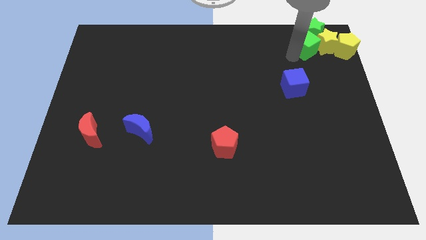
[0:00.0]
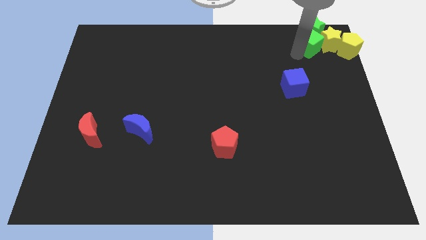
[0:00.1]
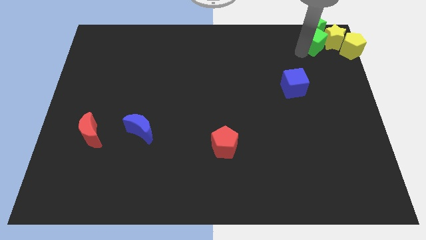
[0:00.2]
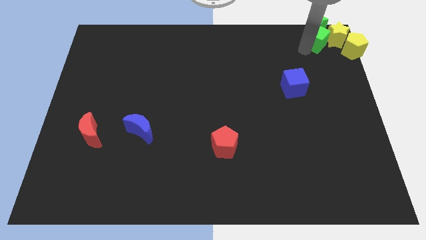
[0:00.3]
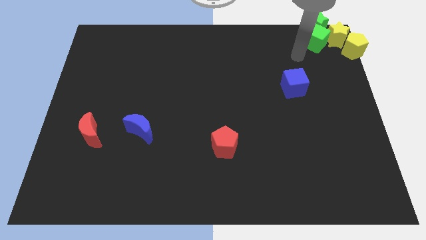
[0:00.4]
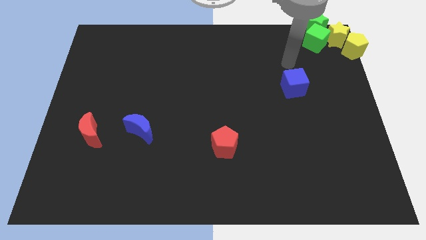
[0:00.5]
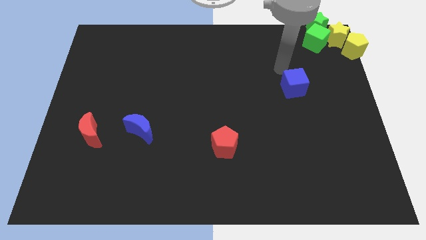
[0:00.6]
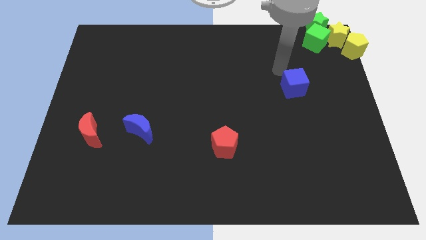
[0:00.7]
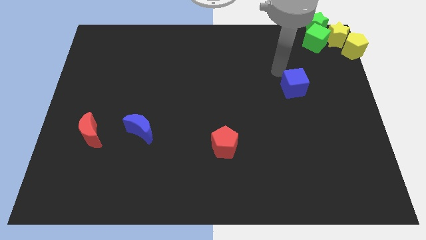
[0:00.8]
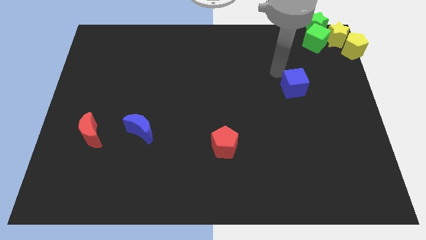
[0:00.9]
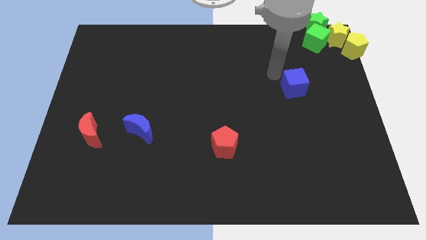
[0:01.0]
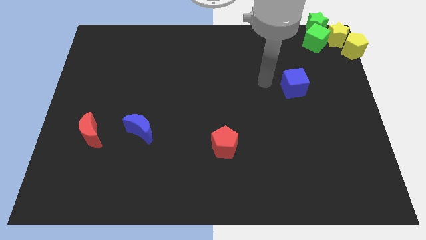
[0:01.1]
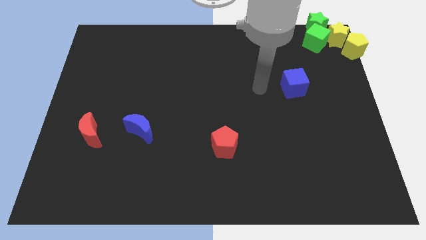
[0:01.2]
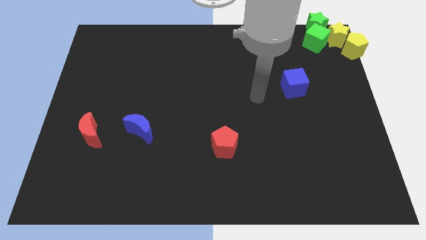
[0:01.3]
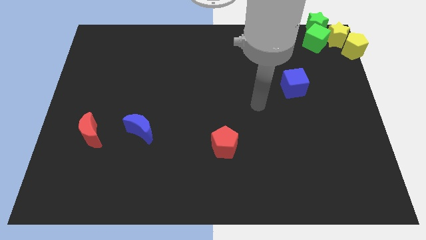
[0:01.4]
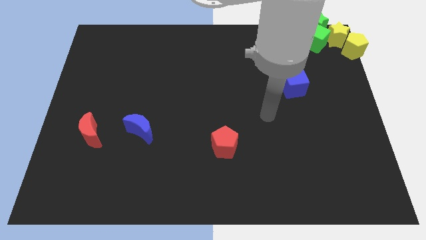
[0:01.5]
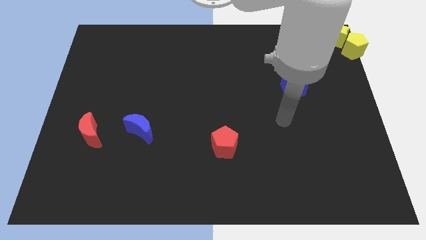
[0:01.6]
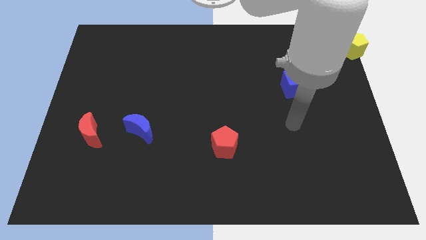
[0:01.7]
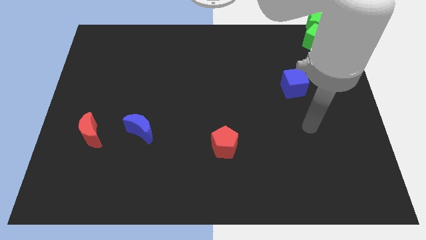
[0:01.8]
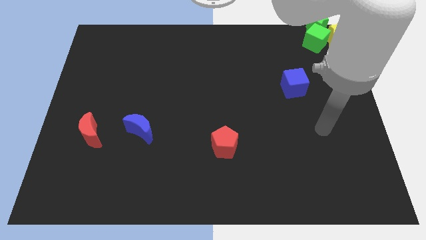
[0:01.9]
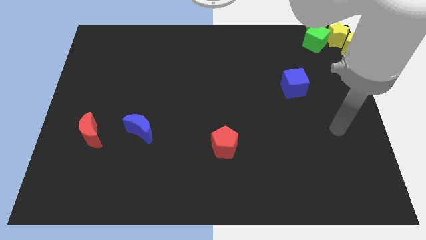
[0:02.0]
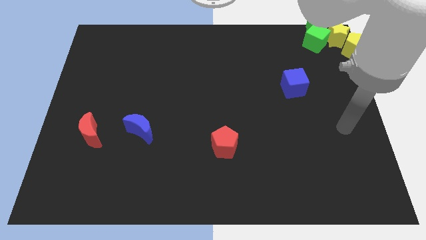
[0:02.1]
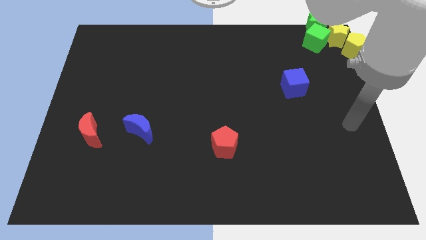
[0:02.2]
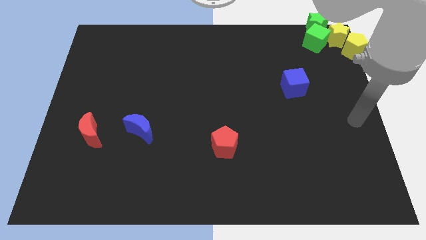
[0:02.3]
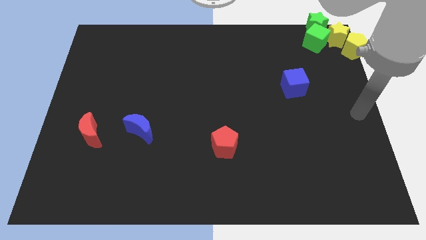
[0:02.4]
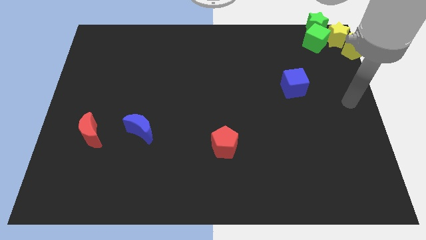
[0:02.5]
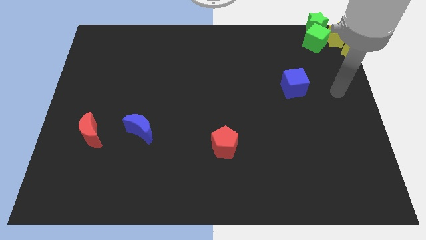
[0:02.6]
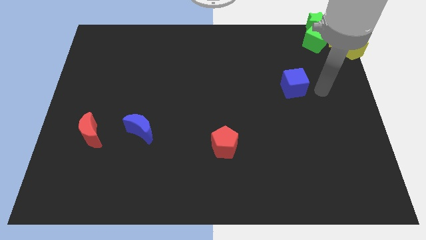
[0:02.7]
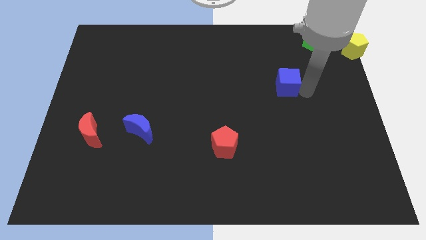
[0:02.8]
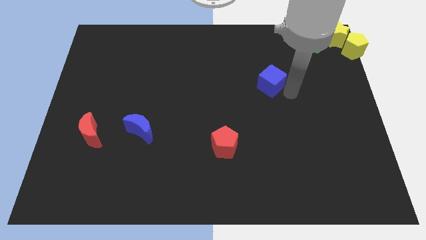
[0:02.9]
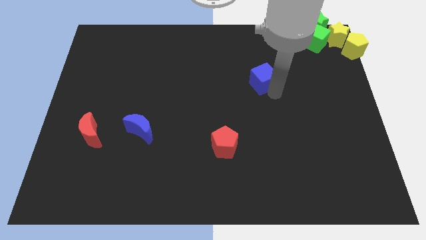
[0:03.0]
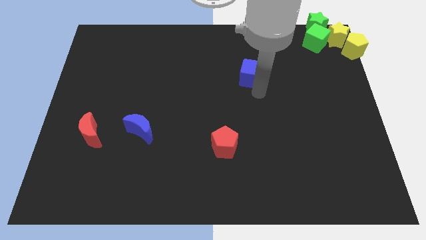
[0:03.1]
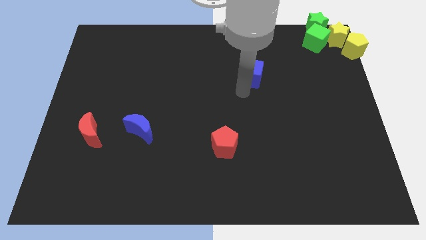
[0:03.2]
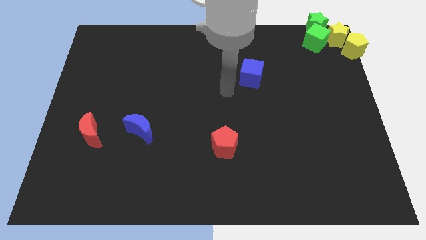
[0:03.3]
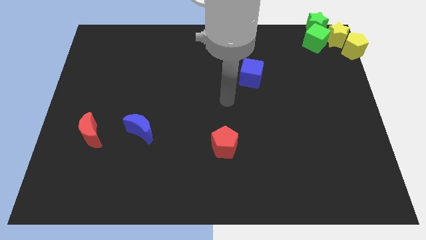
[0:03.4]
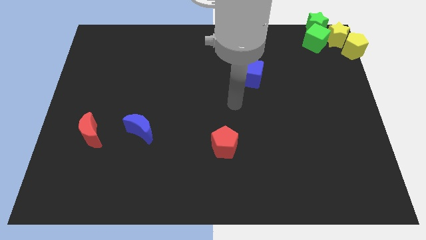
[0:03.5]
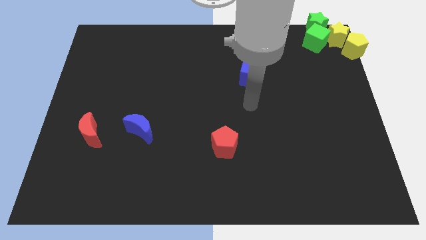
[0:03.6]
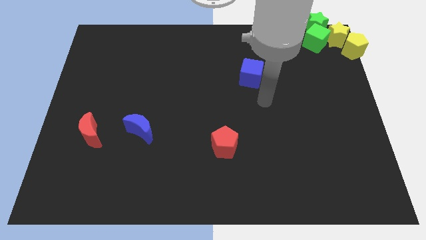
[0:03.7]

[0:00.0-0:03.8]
slightly move the blue cube to the left side of the board

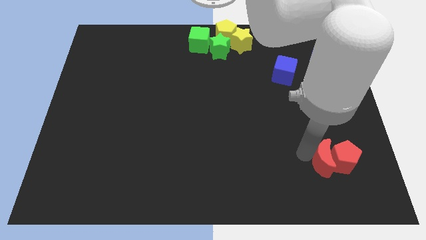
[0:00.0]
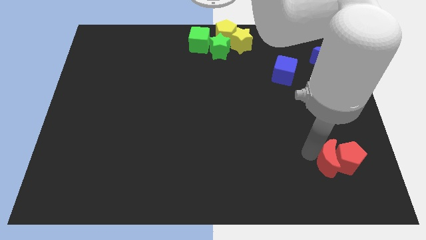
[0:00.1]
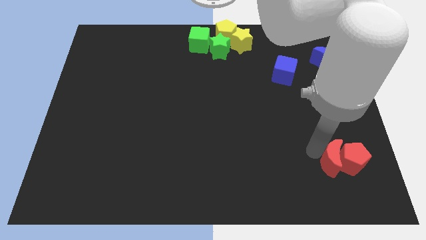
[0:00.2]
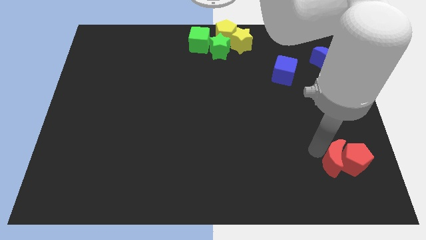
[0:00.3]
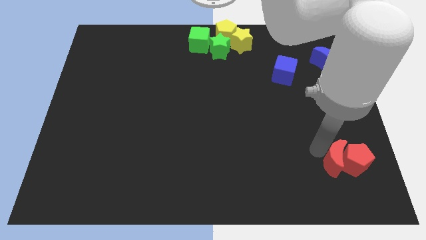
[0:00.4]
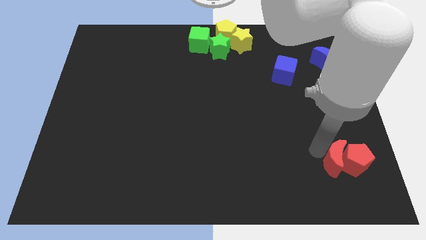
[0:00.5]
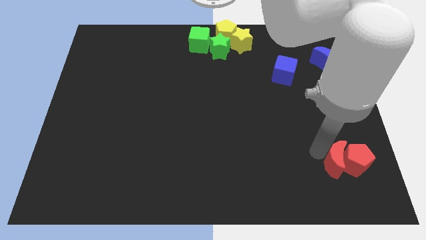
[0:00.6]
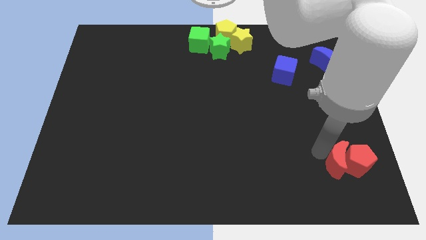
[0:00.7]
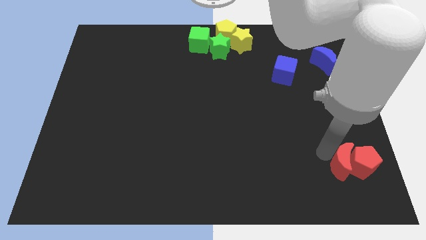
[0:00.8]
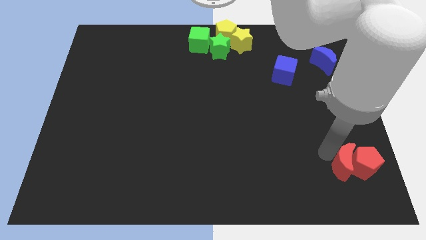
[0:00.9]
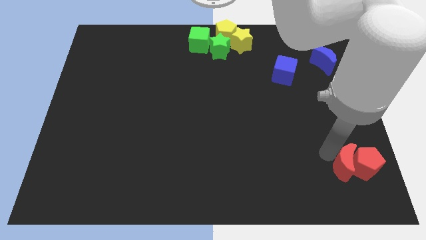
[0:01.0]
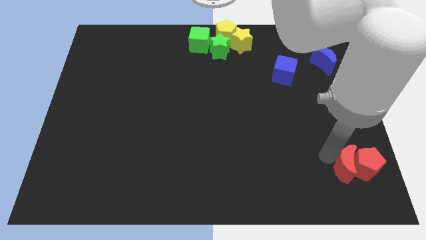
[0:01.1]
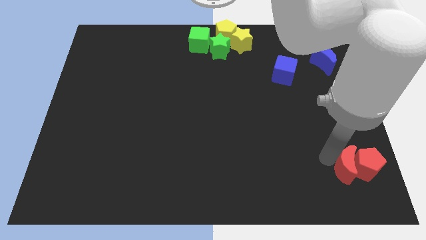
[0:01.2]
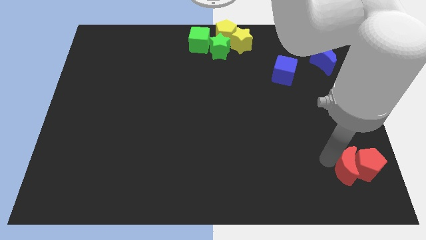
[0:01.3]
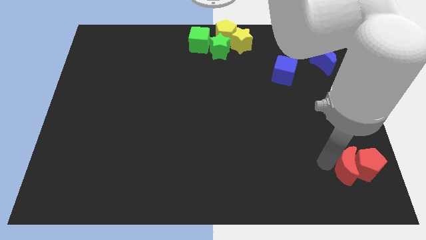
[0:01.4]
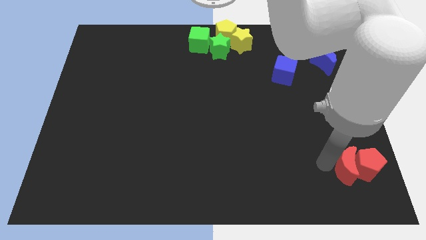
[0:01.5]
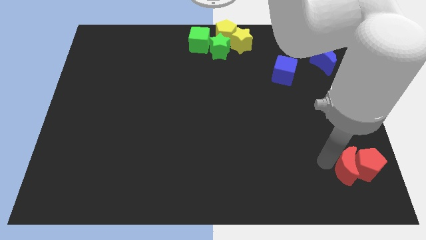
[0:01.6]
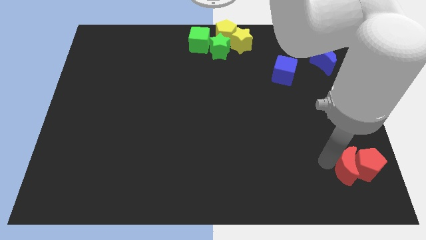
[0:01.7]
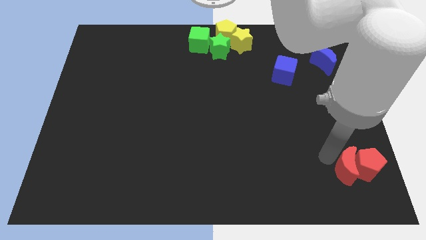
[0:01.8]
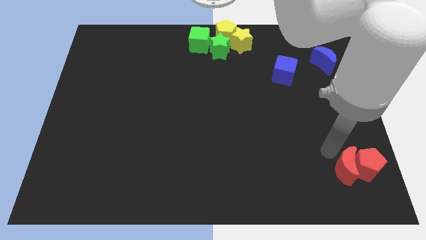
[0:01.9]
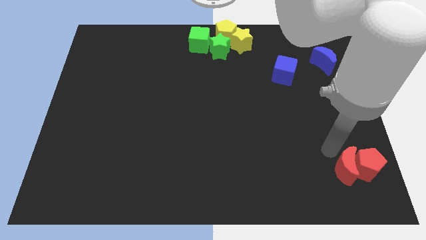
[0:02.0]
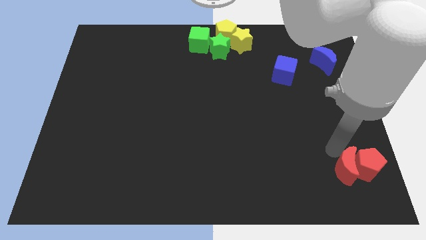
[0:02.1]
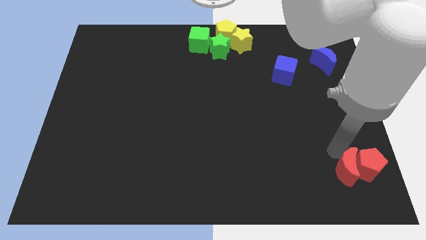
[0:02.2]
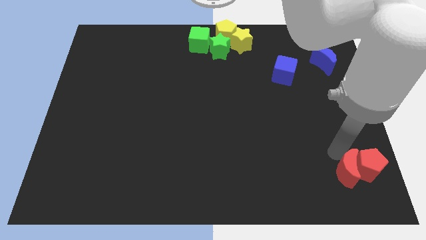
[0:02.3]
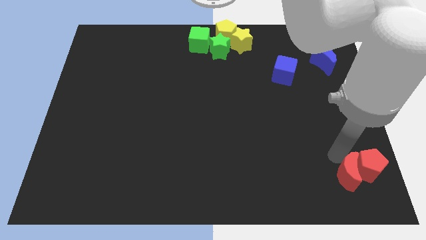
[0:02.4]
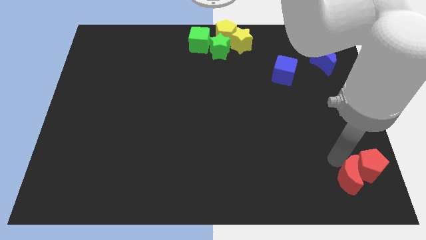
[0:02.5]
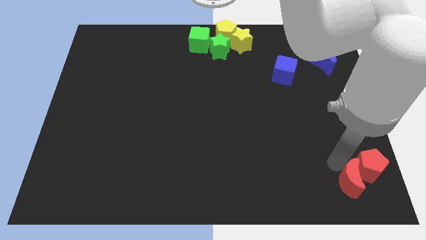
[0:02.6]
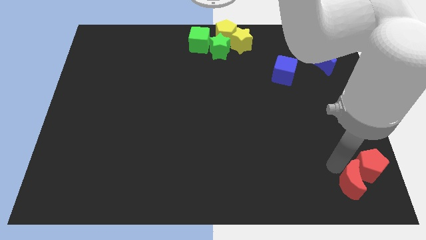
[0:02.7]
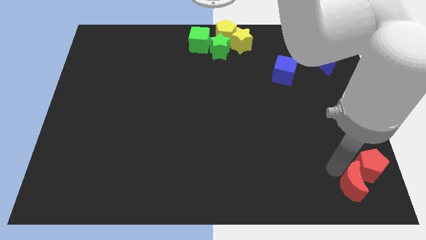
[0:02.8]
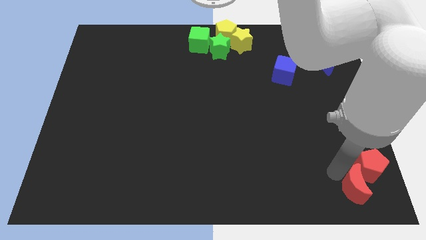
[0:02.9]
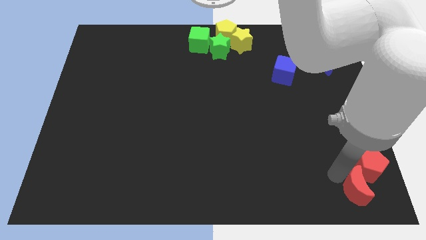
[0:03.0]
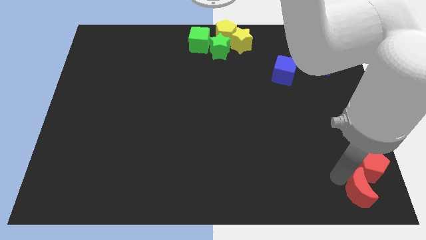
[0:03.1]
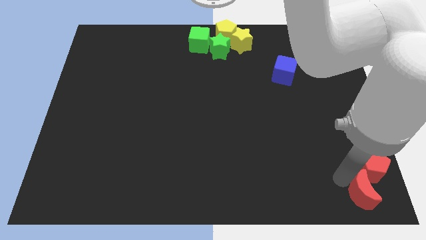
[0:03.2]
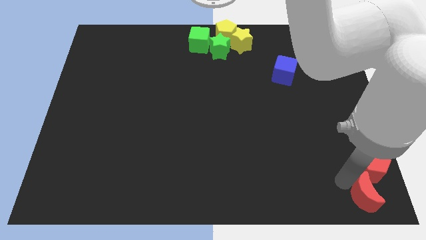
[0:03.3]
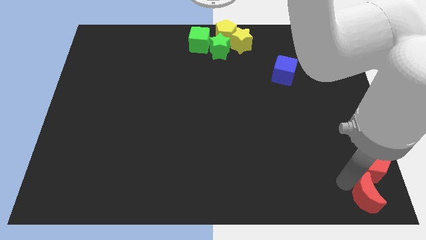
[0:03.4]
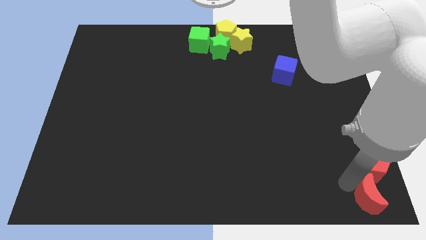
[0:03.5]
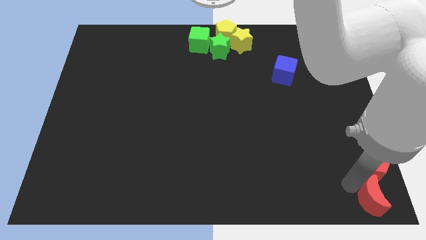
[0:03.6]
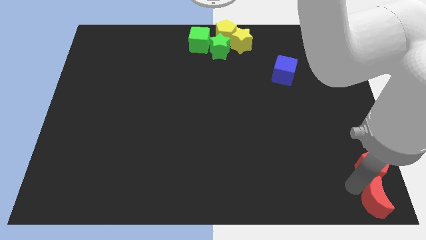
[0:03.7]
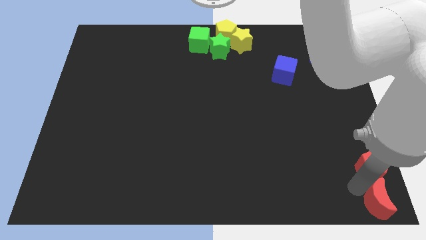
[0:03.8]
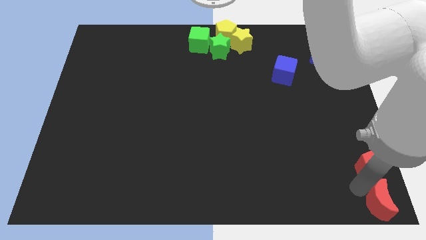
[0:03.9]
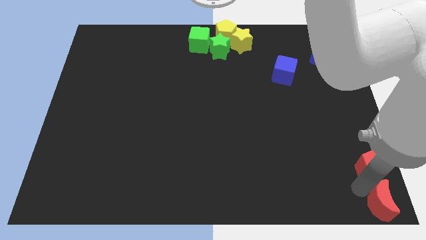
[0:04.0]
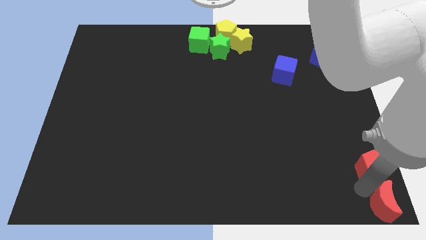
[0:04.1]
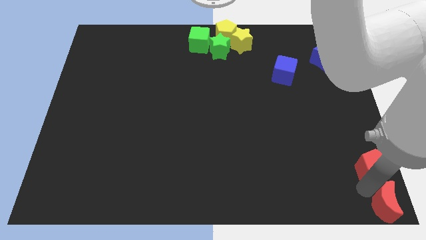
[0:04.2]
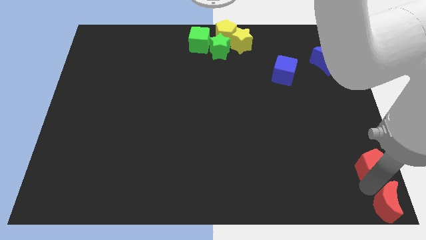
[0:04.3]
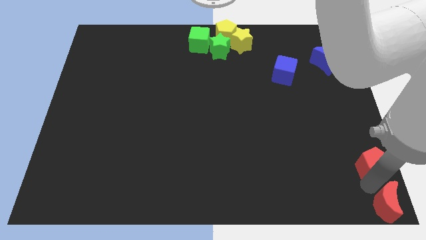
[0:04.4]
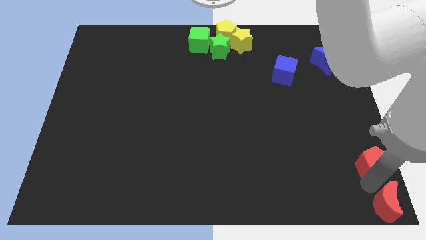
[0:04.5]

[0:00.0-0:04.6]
place the red moon at the bottom right corner

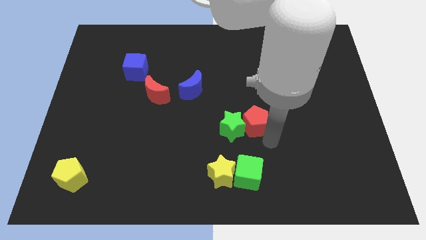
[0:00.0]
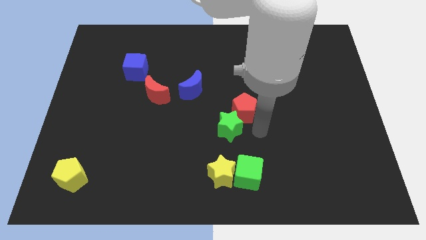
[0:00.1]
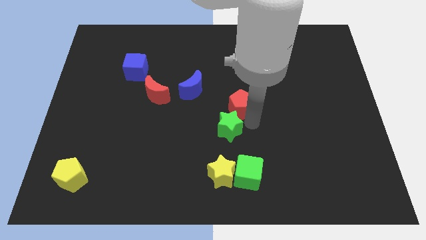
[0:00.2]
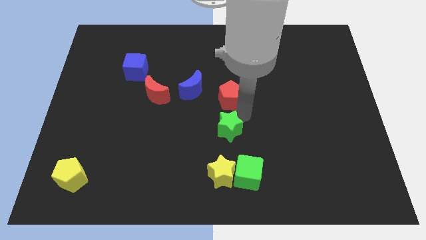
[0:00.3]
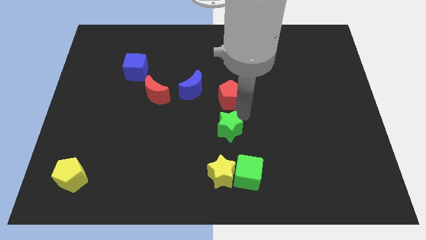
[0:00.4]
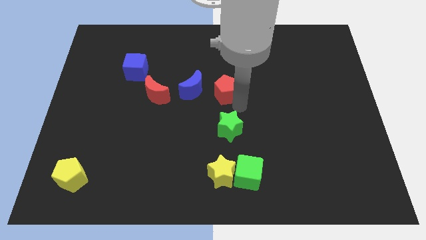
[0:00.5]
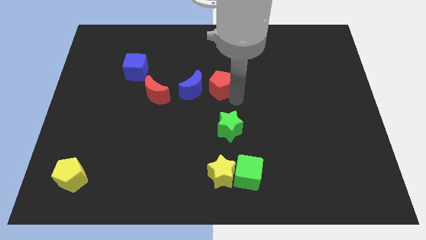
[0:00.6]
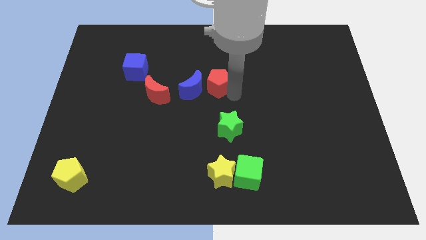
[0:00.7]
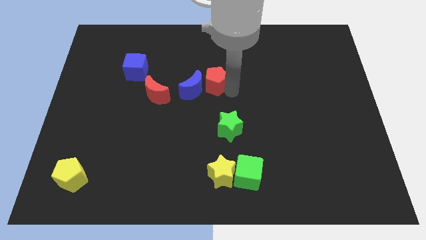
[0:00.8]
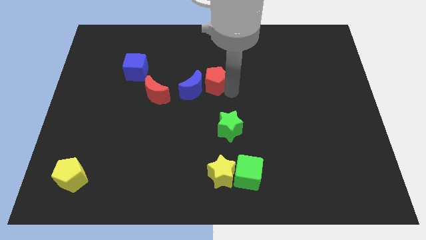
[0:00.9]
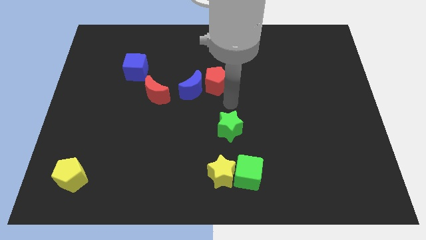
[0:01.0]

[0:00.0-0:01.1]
move the red pentagon to the right side of the blue crescent
